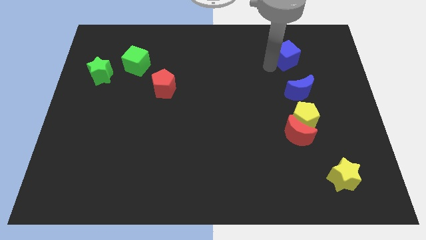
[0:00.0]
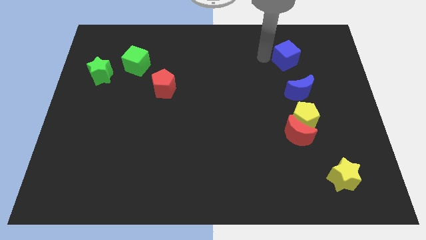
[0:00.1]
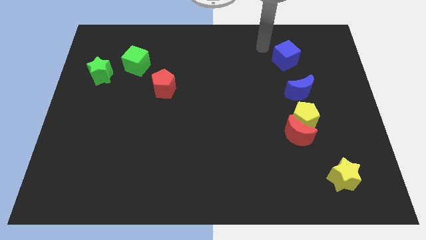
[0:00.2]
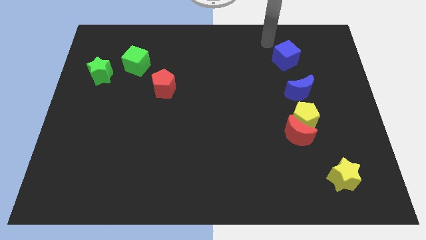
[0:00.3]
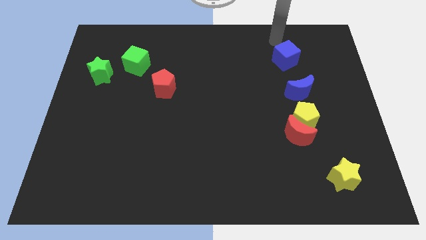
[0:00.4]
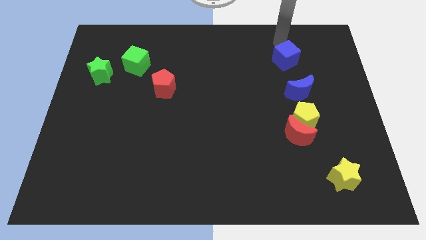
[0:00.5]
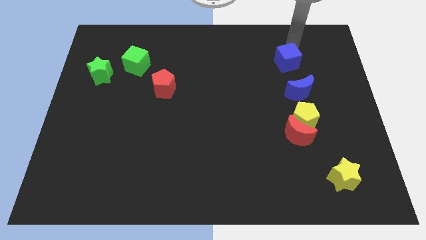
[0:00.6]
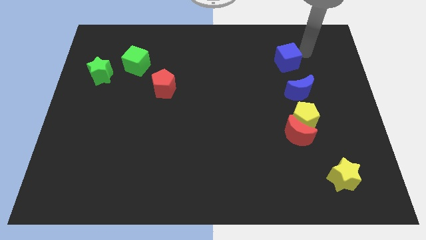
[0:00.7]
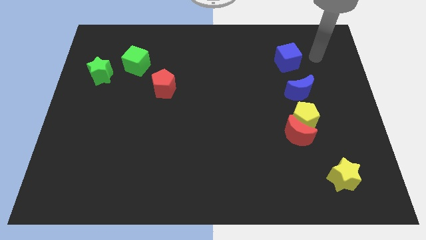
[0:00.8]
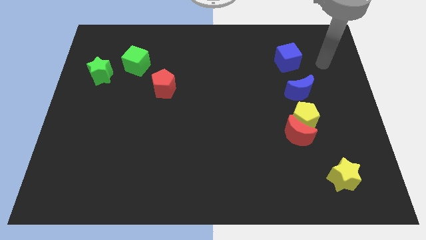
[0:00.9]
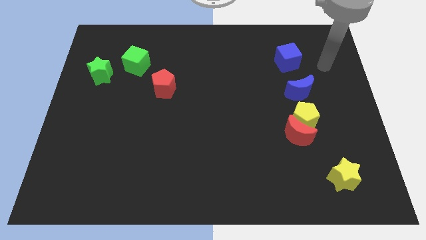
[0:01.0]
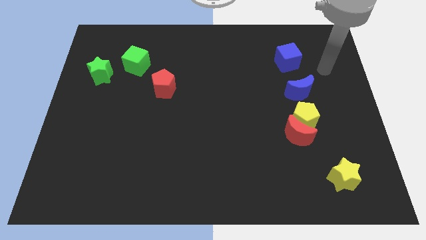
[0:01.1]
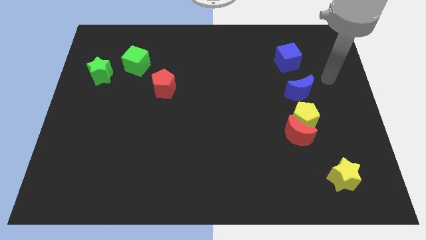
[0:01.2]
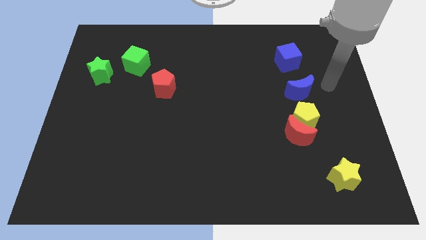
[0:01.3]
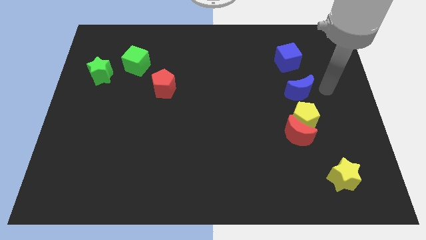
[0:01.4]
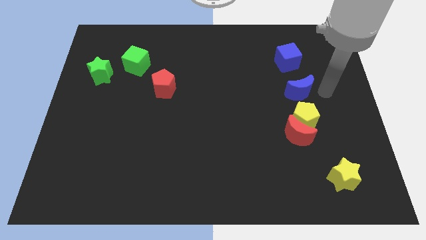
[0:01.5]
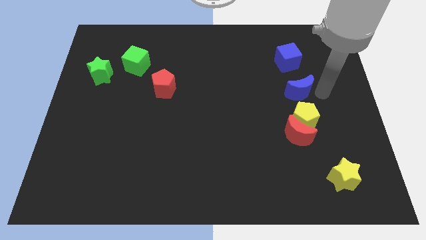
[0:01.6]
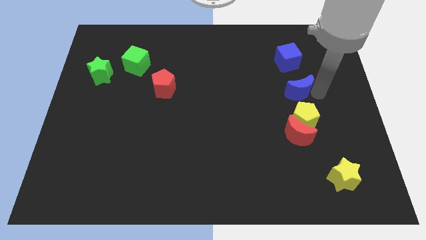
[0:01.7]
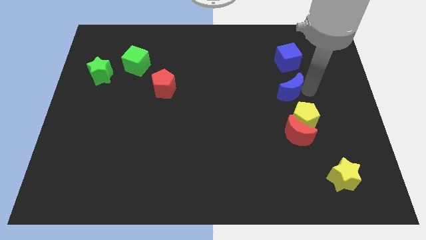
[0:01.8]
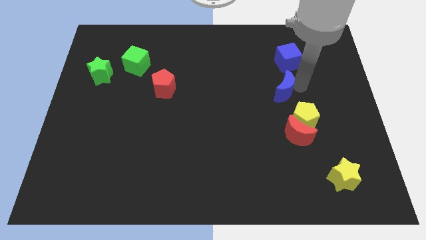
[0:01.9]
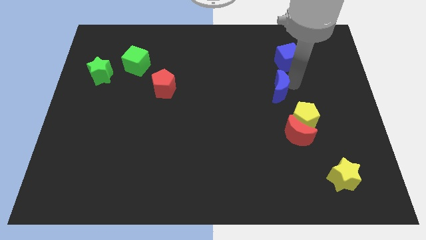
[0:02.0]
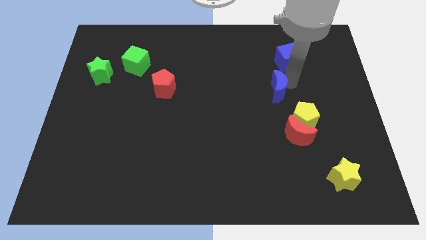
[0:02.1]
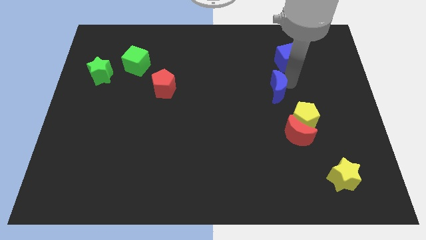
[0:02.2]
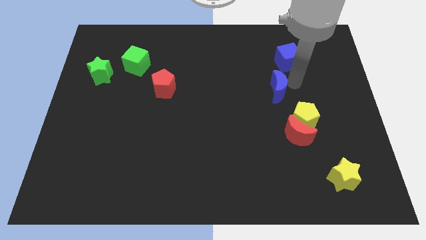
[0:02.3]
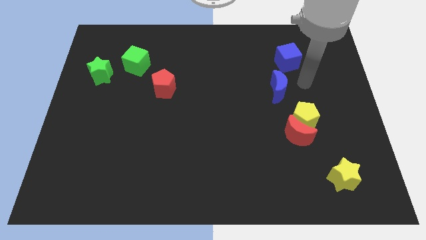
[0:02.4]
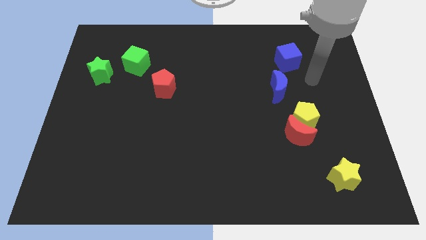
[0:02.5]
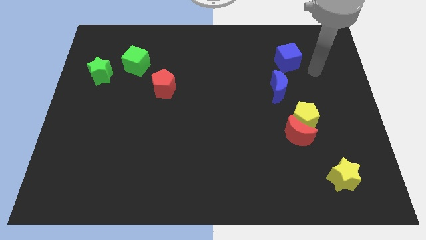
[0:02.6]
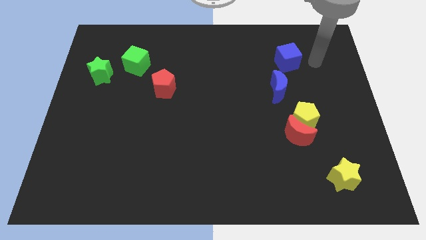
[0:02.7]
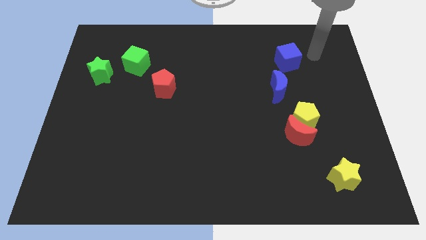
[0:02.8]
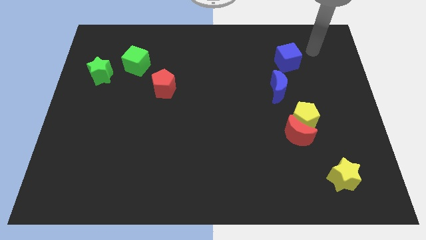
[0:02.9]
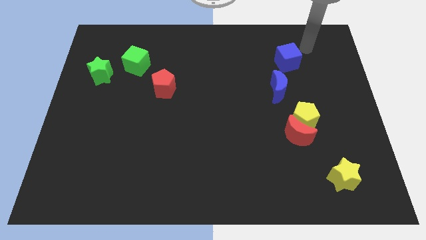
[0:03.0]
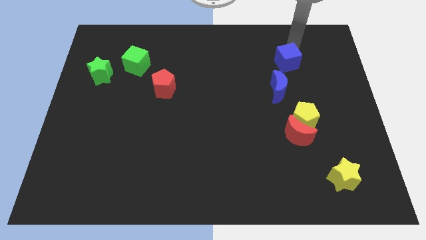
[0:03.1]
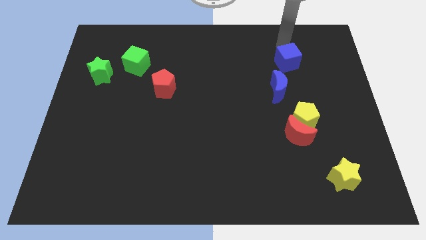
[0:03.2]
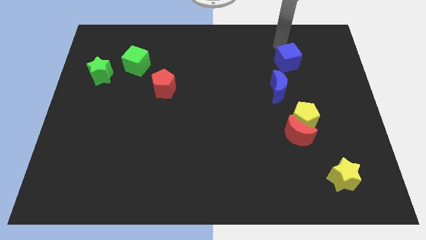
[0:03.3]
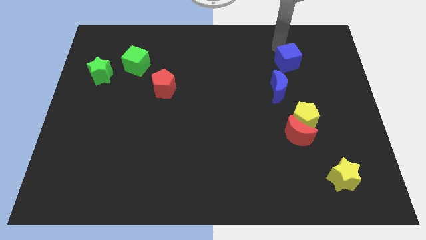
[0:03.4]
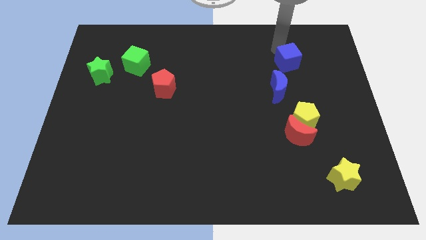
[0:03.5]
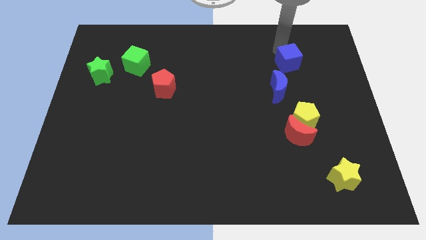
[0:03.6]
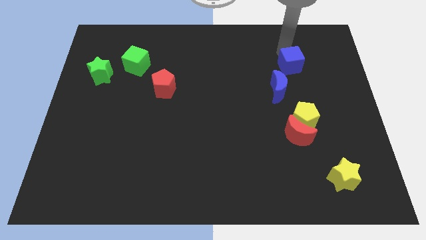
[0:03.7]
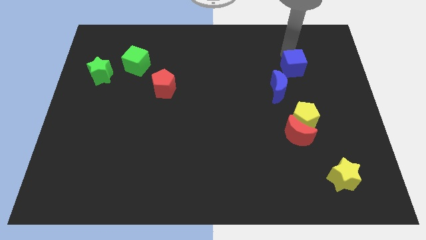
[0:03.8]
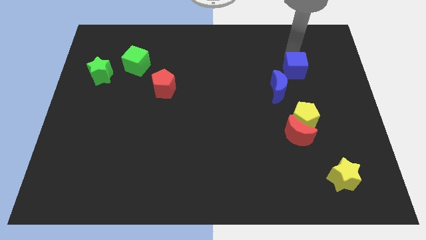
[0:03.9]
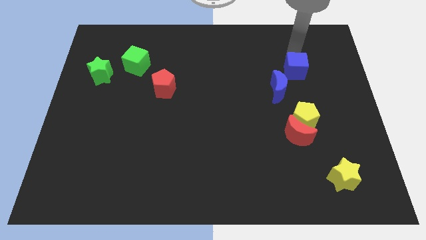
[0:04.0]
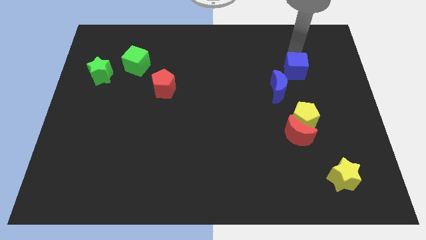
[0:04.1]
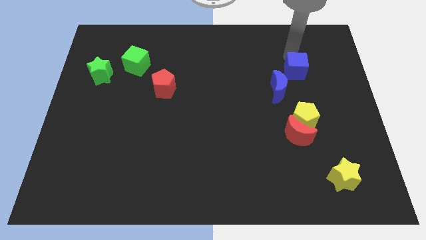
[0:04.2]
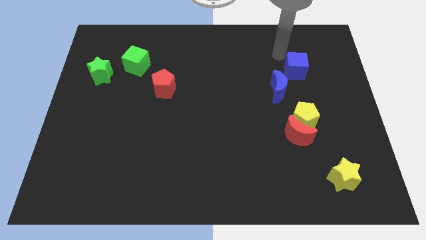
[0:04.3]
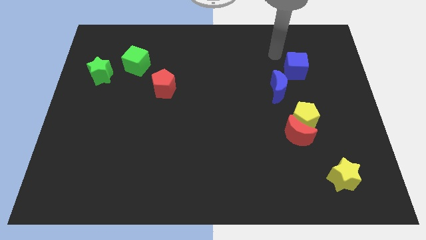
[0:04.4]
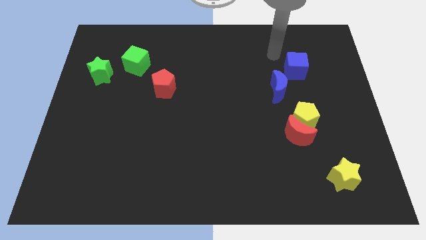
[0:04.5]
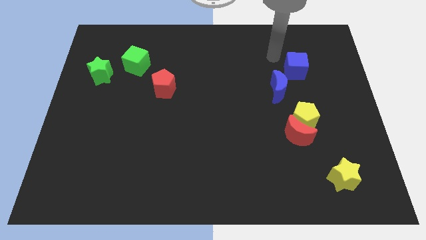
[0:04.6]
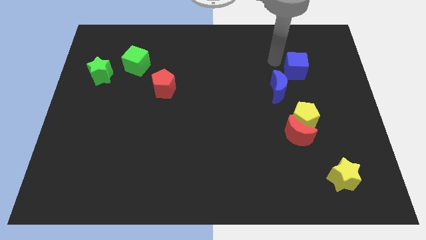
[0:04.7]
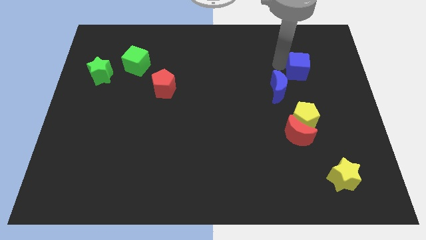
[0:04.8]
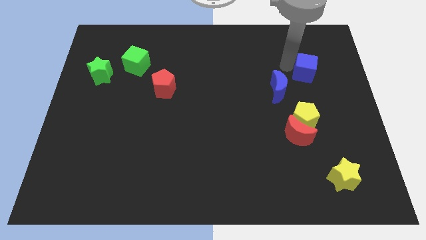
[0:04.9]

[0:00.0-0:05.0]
push blue cube towards right side

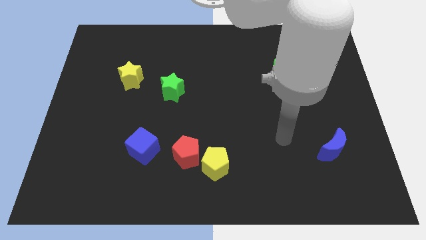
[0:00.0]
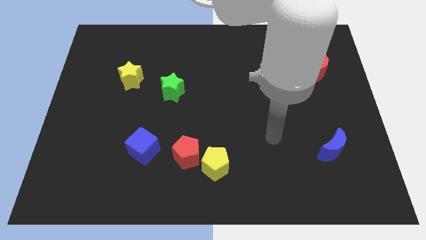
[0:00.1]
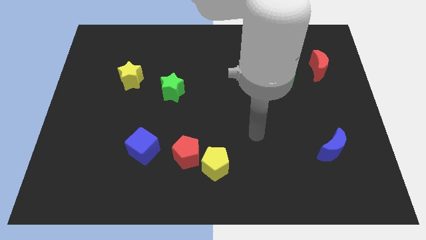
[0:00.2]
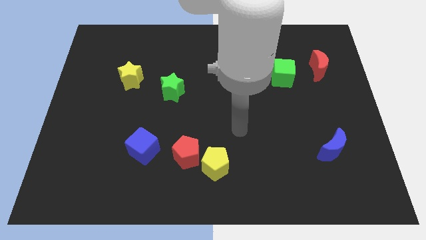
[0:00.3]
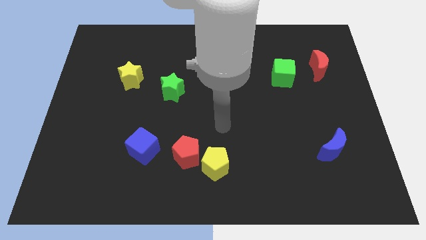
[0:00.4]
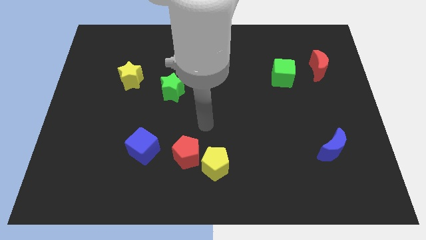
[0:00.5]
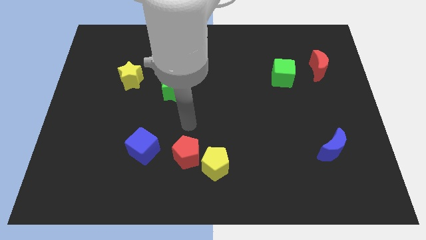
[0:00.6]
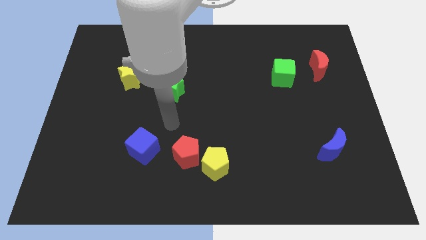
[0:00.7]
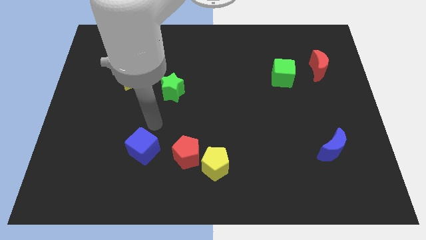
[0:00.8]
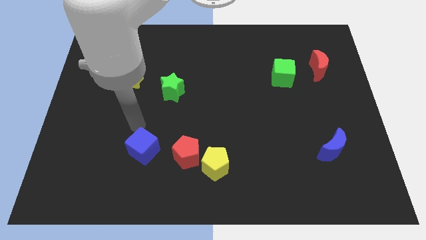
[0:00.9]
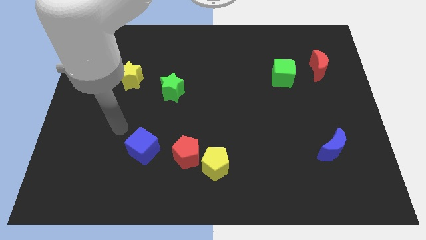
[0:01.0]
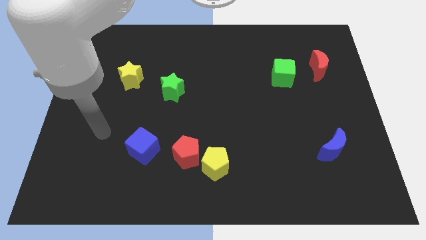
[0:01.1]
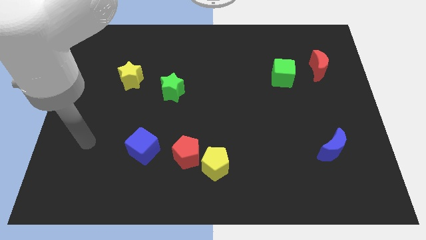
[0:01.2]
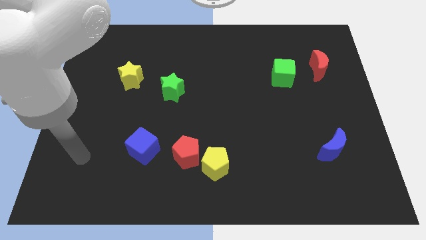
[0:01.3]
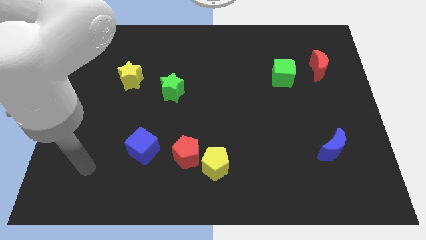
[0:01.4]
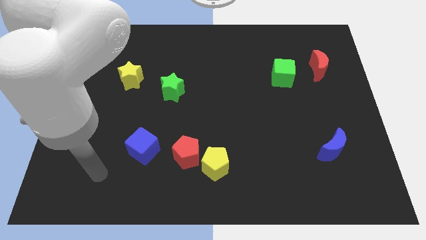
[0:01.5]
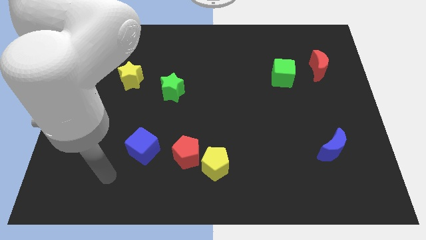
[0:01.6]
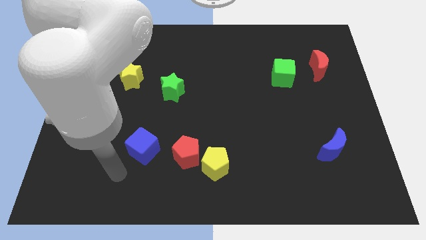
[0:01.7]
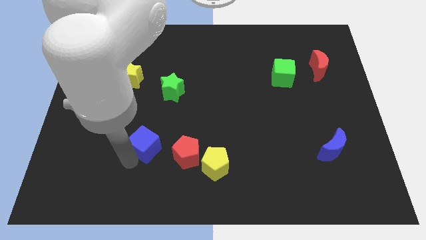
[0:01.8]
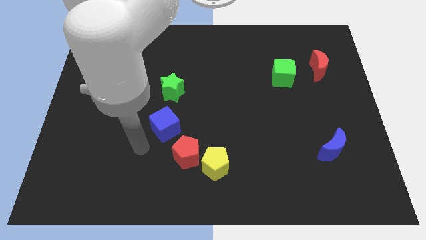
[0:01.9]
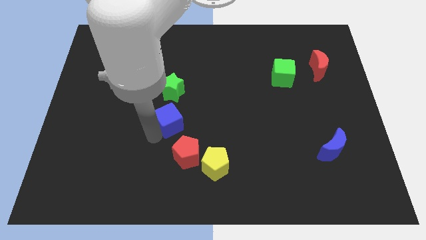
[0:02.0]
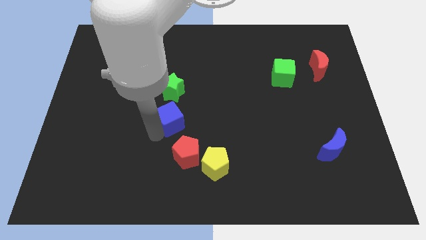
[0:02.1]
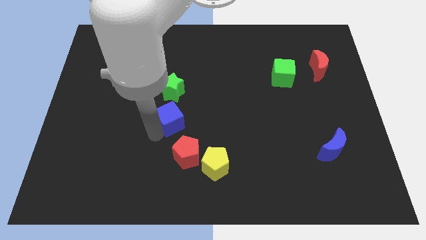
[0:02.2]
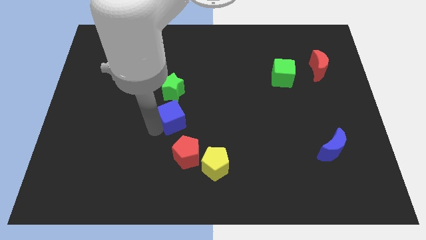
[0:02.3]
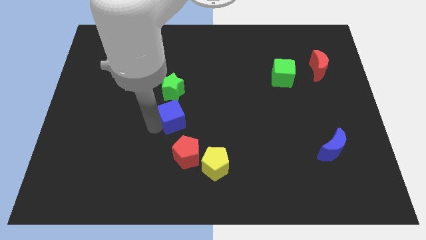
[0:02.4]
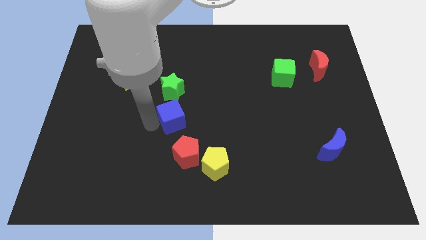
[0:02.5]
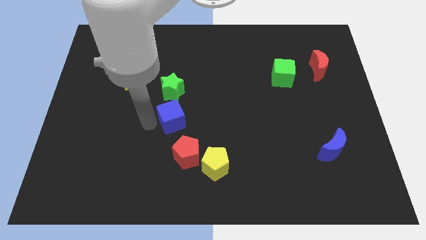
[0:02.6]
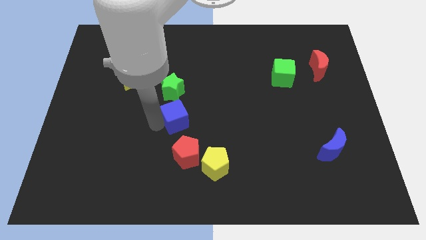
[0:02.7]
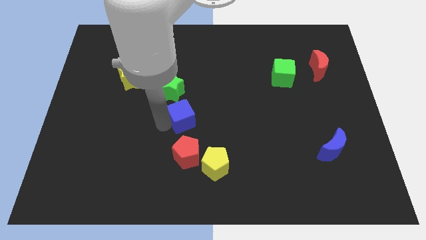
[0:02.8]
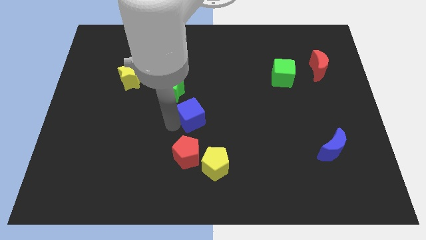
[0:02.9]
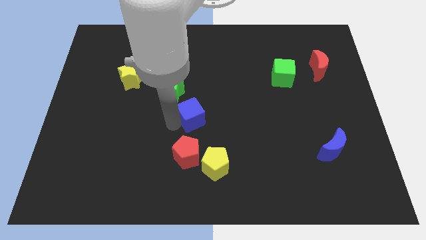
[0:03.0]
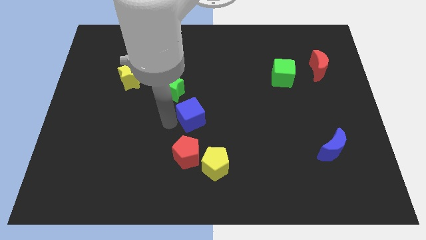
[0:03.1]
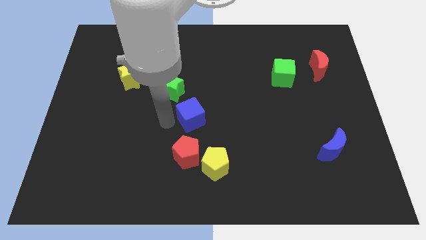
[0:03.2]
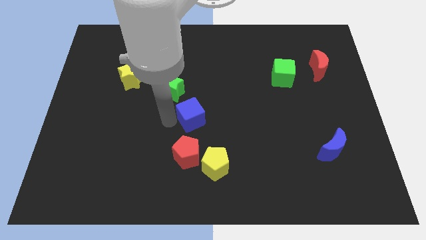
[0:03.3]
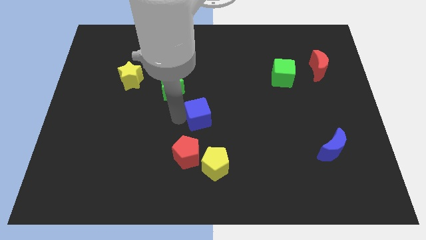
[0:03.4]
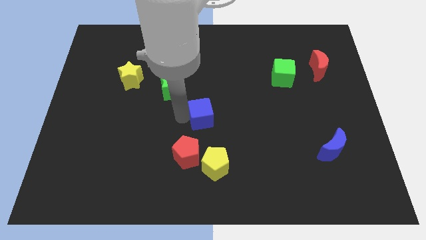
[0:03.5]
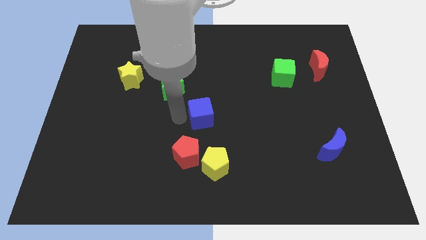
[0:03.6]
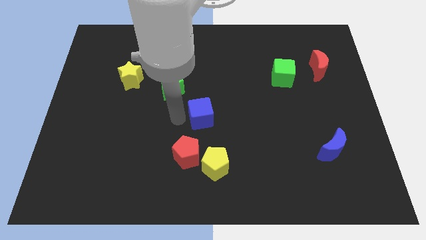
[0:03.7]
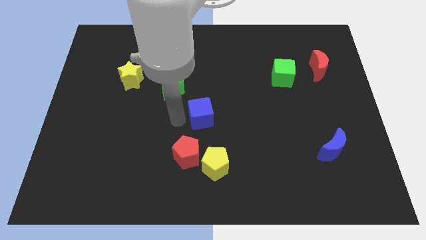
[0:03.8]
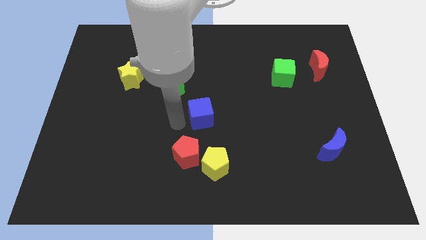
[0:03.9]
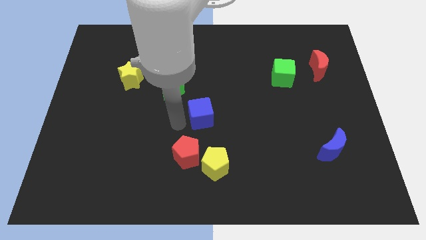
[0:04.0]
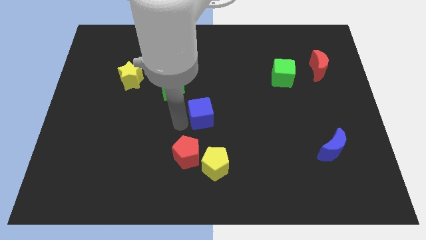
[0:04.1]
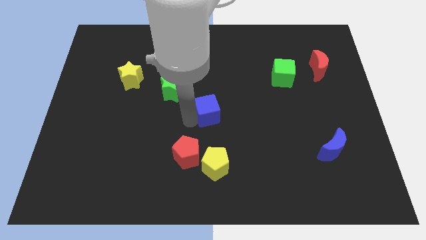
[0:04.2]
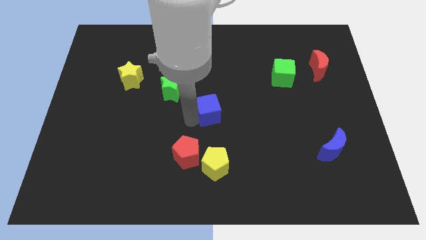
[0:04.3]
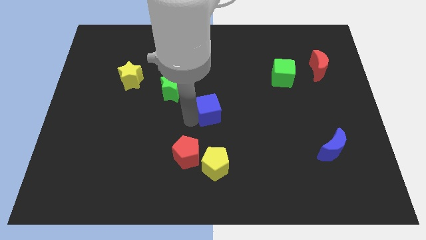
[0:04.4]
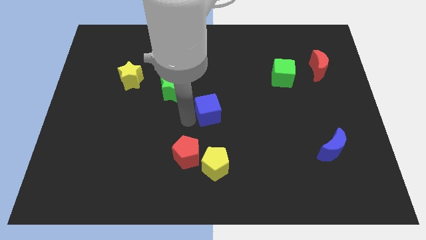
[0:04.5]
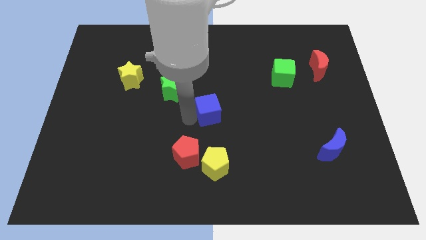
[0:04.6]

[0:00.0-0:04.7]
move the blue cube to the center of the board
